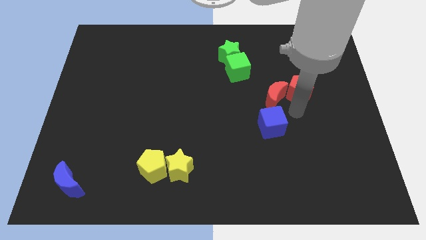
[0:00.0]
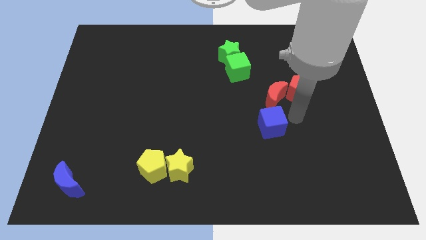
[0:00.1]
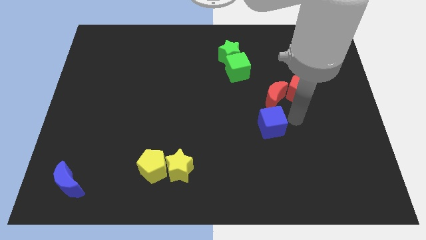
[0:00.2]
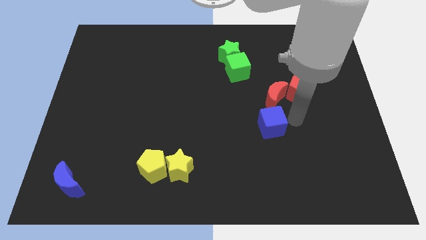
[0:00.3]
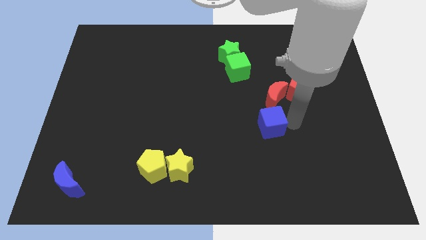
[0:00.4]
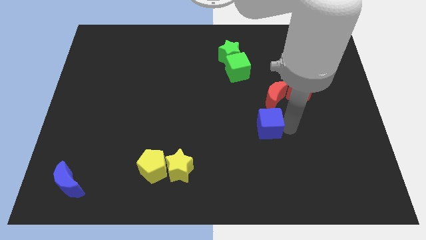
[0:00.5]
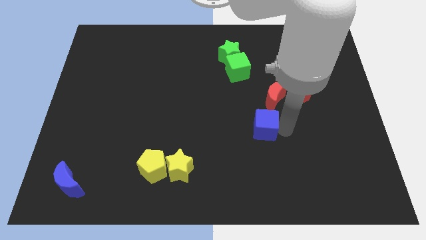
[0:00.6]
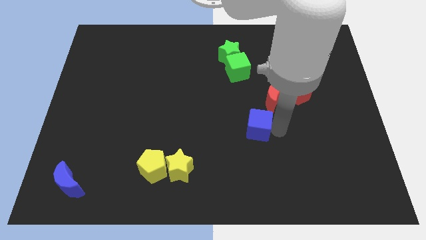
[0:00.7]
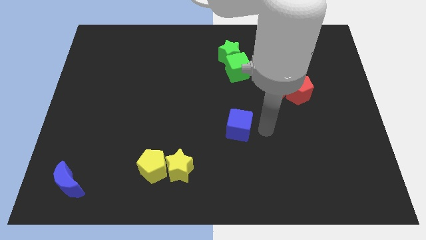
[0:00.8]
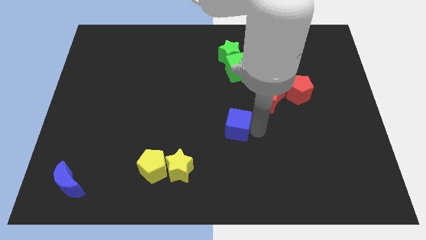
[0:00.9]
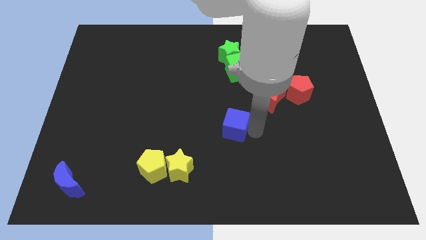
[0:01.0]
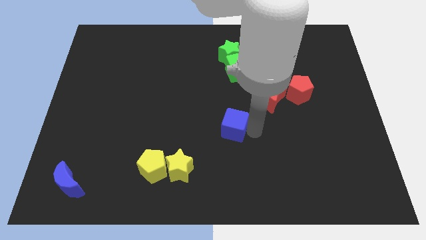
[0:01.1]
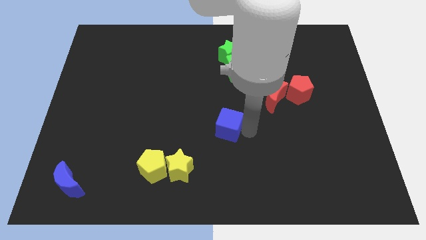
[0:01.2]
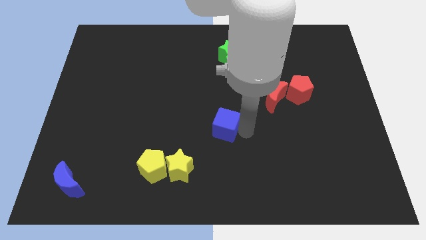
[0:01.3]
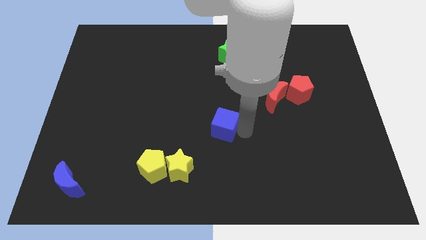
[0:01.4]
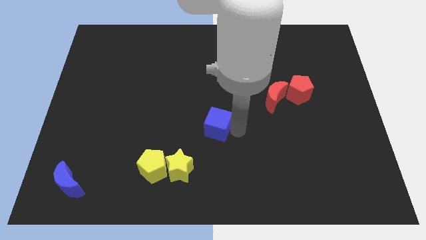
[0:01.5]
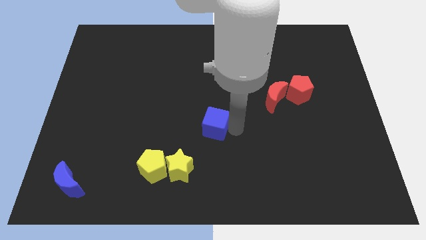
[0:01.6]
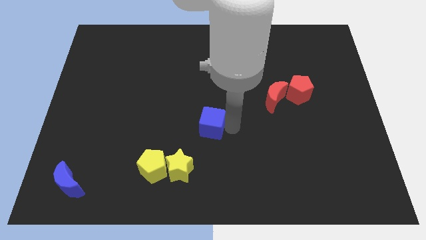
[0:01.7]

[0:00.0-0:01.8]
separate the blue cube from the red crescent

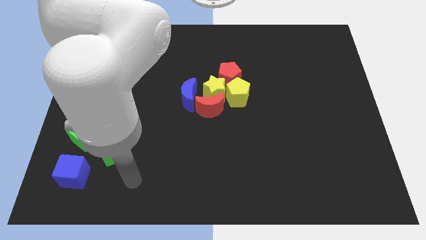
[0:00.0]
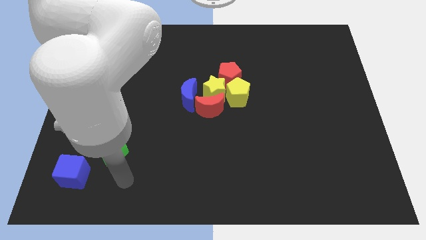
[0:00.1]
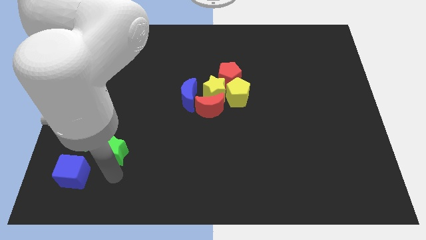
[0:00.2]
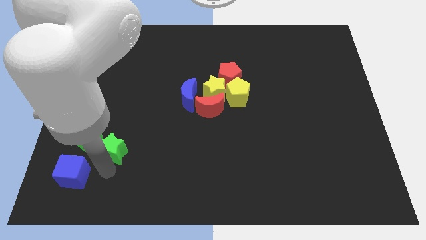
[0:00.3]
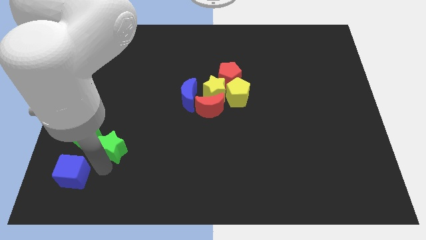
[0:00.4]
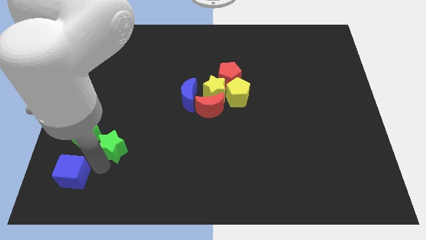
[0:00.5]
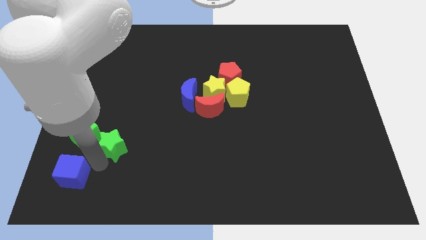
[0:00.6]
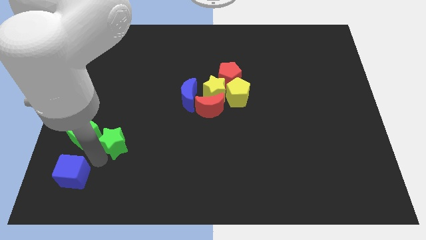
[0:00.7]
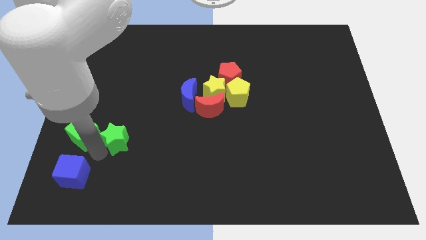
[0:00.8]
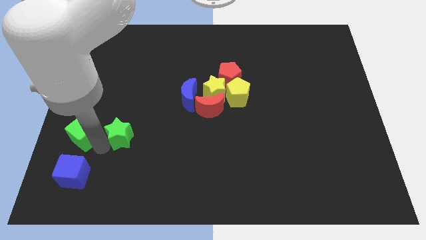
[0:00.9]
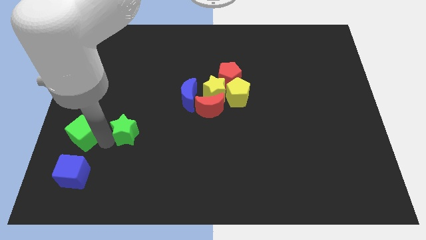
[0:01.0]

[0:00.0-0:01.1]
move the green star slightly to the top

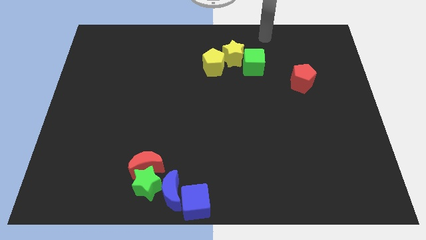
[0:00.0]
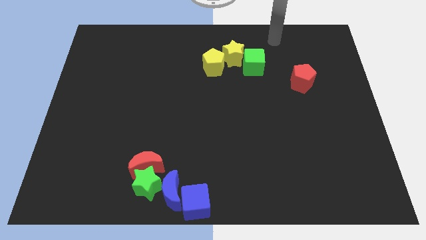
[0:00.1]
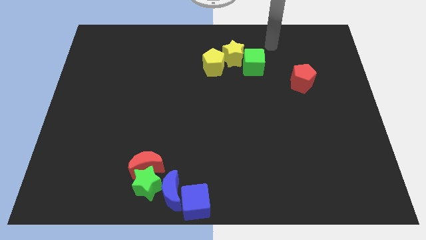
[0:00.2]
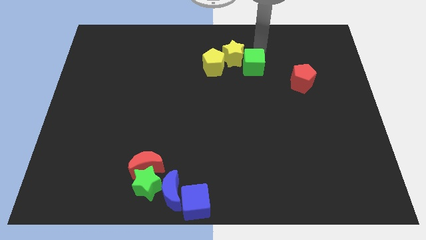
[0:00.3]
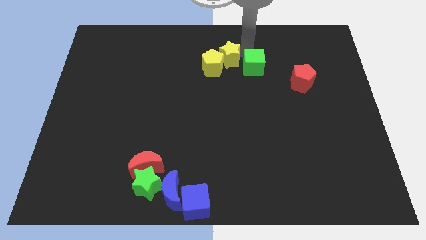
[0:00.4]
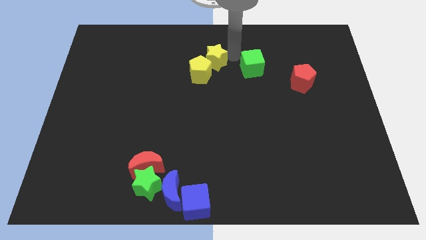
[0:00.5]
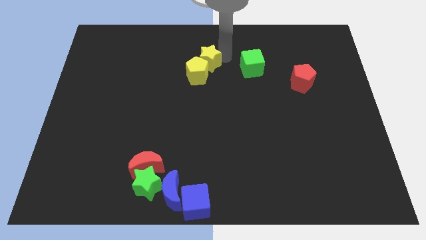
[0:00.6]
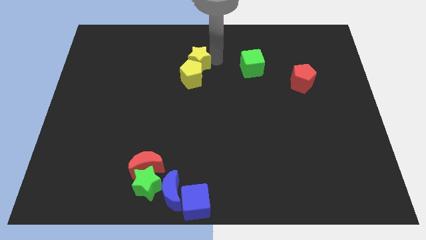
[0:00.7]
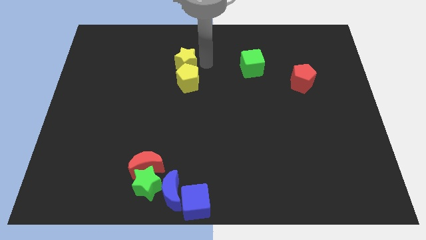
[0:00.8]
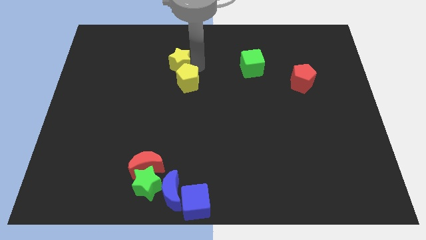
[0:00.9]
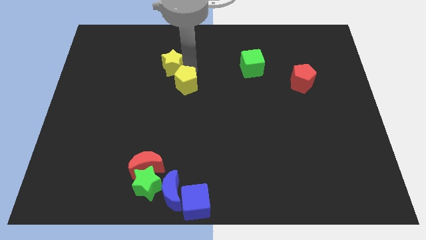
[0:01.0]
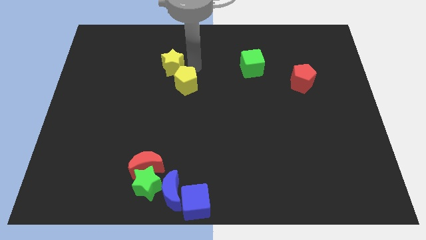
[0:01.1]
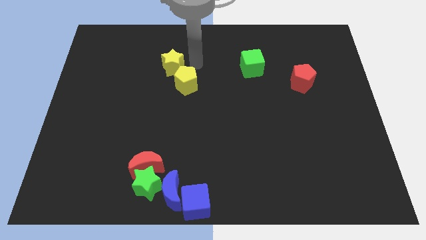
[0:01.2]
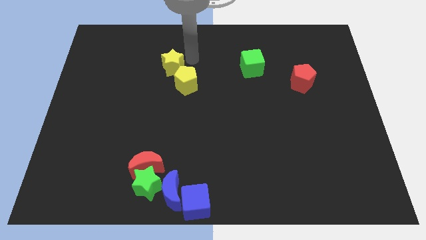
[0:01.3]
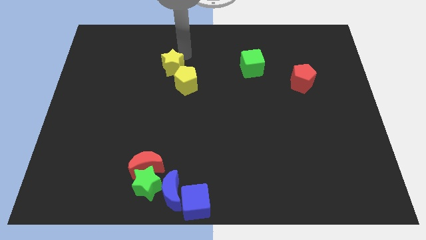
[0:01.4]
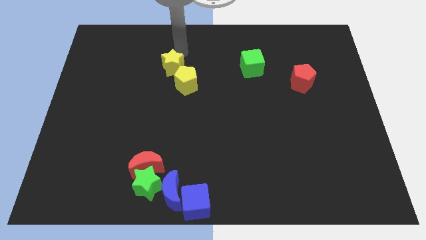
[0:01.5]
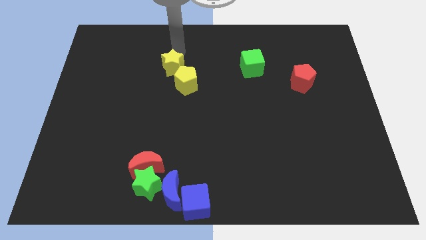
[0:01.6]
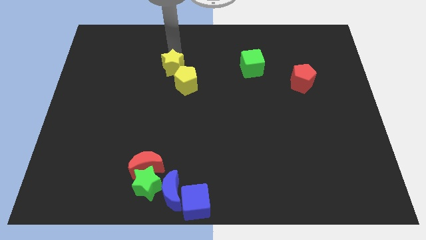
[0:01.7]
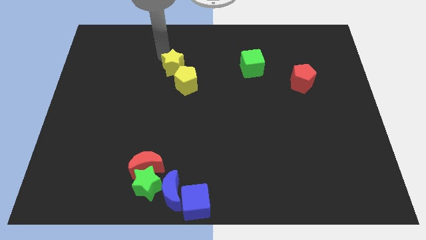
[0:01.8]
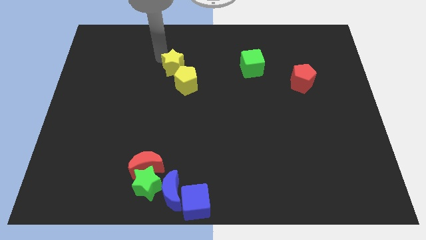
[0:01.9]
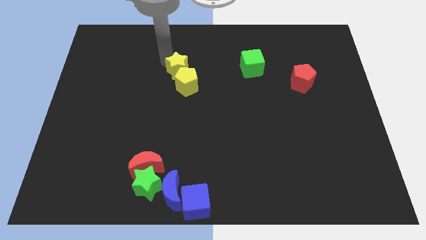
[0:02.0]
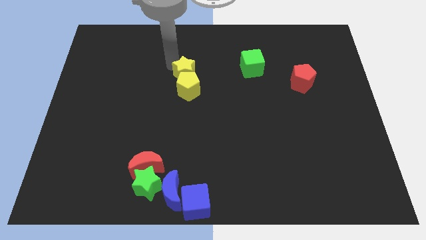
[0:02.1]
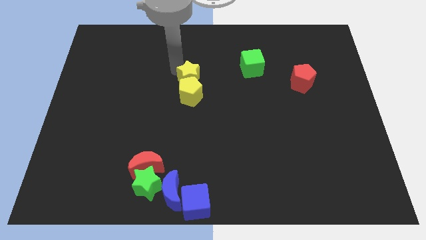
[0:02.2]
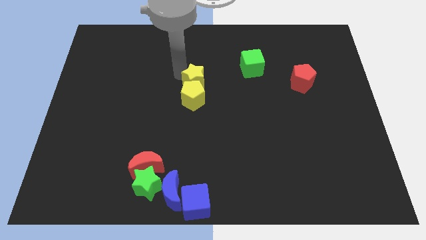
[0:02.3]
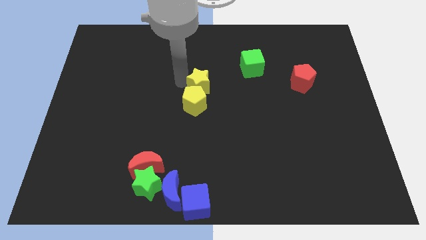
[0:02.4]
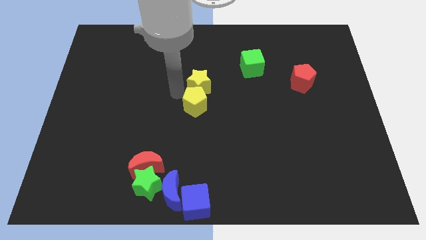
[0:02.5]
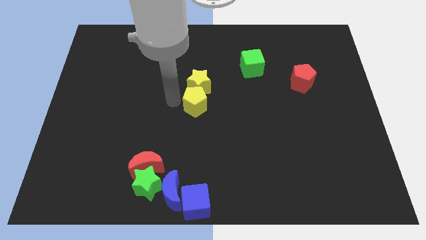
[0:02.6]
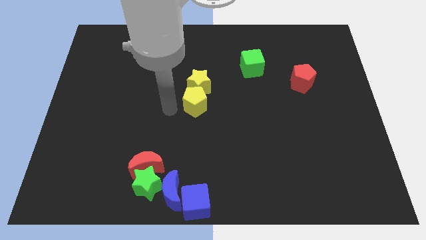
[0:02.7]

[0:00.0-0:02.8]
push the yellow star into the yellow pentagon down

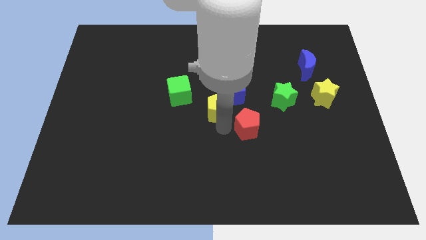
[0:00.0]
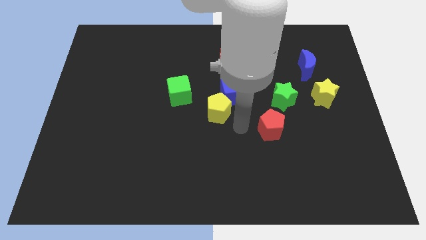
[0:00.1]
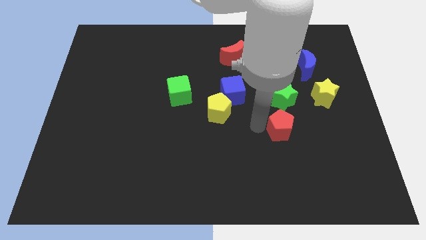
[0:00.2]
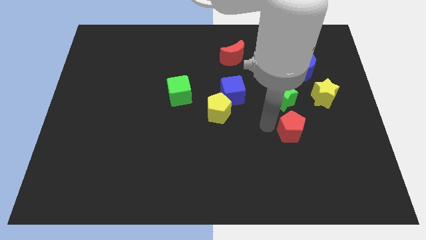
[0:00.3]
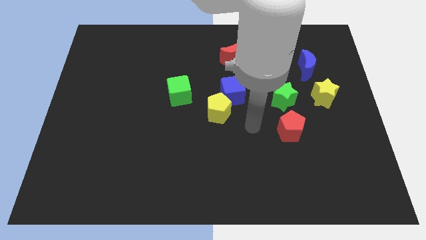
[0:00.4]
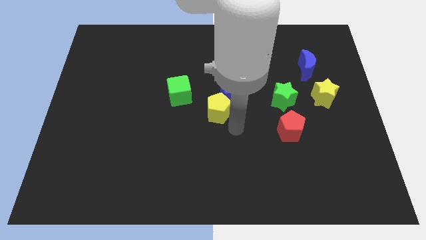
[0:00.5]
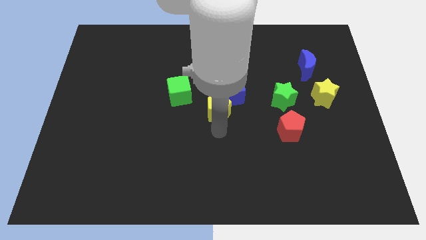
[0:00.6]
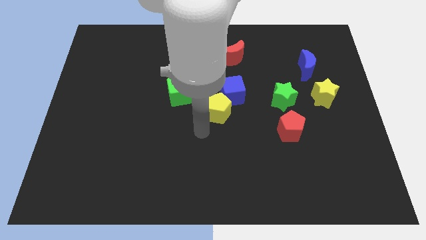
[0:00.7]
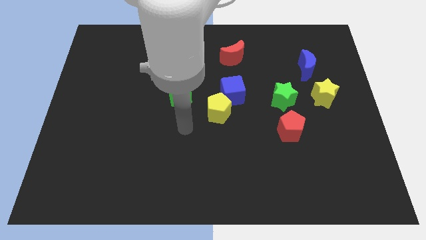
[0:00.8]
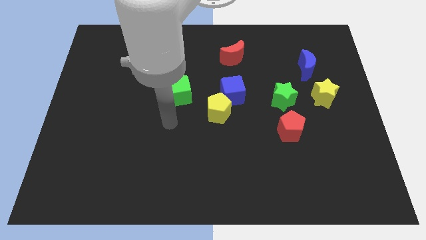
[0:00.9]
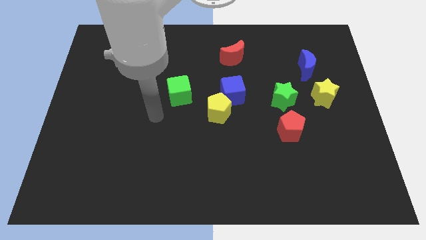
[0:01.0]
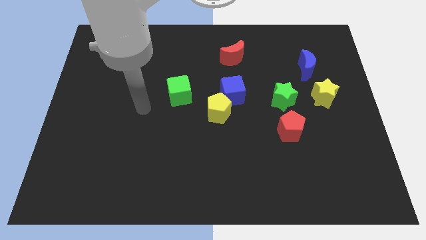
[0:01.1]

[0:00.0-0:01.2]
move the red pentagon below the green star

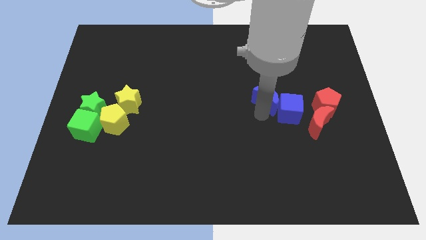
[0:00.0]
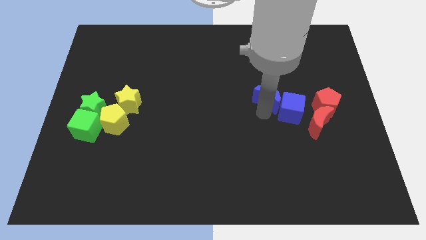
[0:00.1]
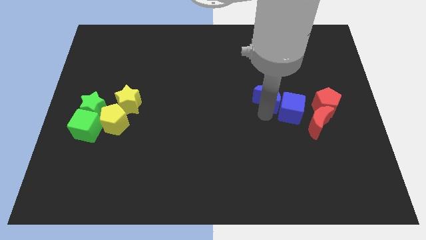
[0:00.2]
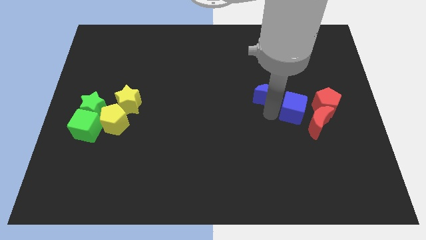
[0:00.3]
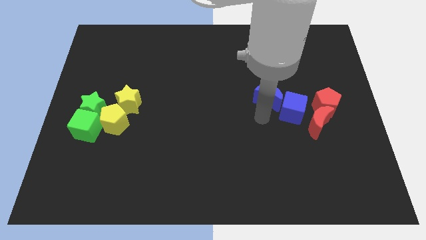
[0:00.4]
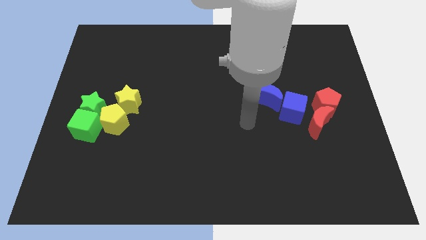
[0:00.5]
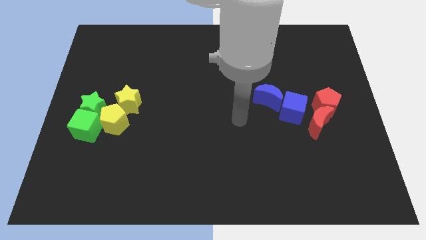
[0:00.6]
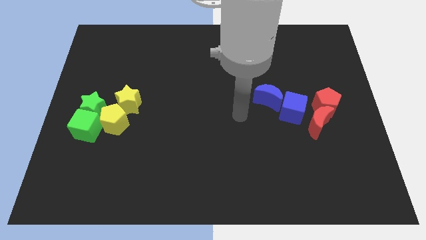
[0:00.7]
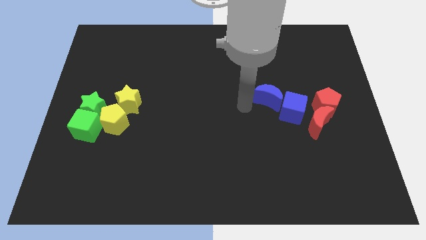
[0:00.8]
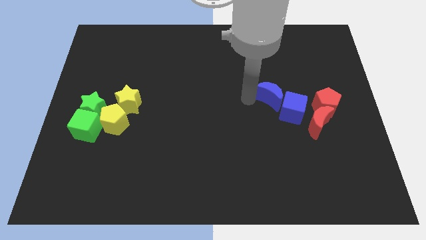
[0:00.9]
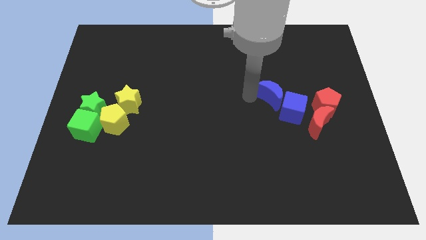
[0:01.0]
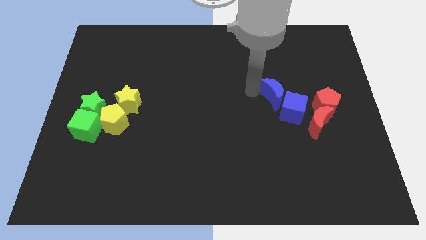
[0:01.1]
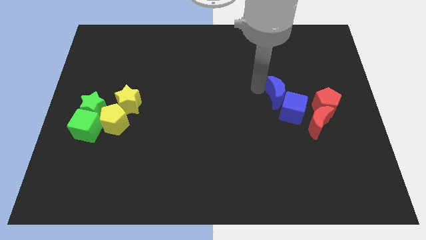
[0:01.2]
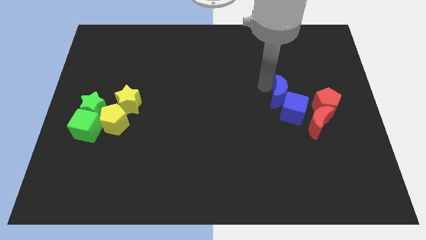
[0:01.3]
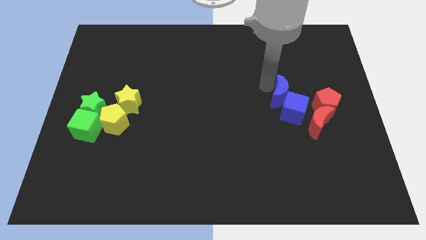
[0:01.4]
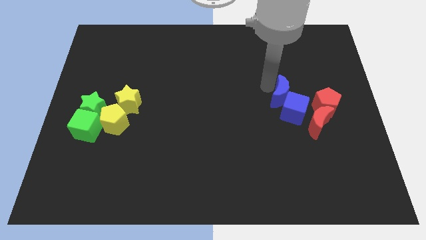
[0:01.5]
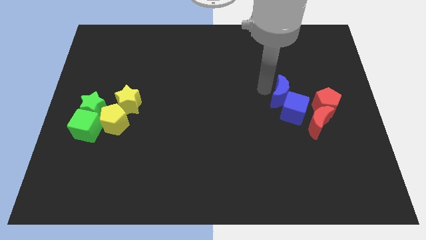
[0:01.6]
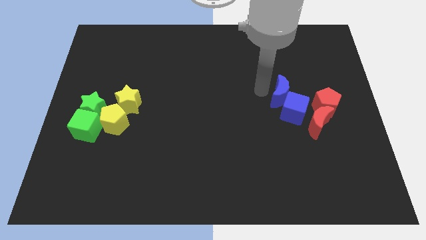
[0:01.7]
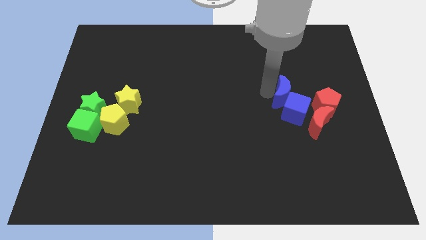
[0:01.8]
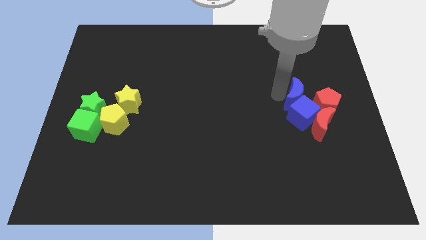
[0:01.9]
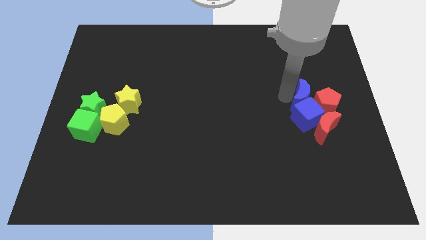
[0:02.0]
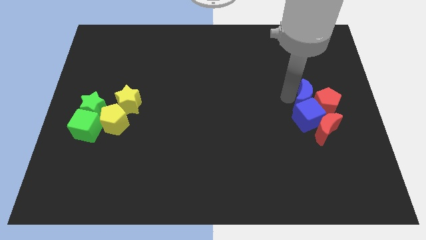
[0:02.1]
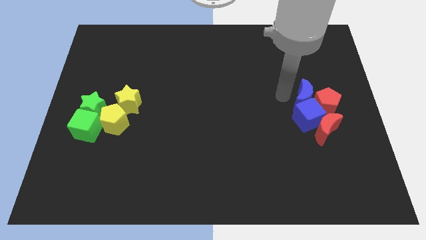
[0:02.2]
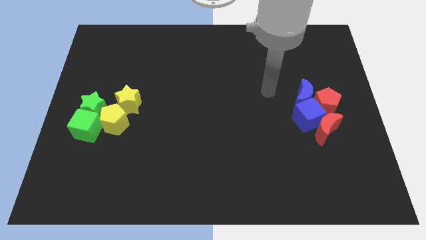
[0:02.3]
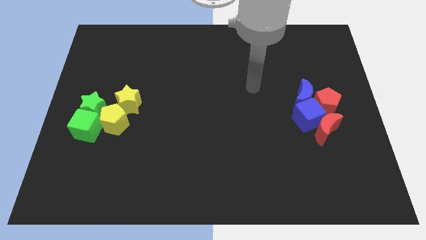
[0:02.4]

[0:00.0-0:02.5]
push the group of blue blocks into the group of red blocks
